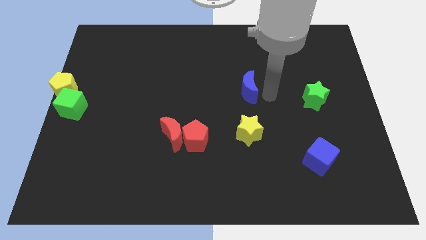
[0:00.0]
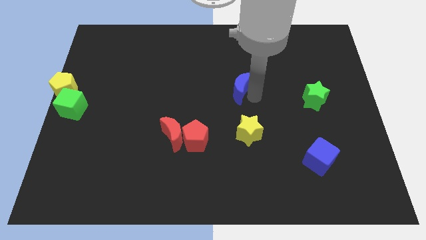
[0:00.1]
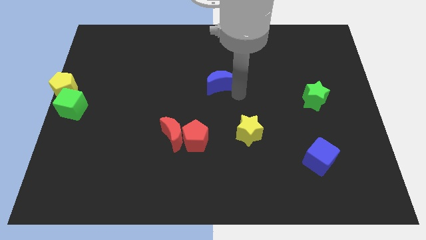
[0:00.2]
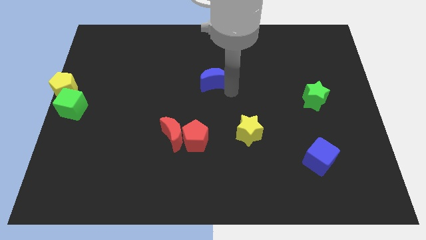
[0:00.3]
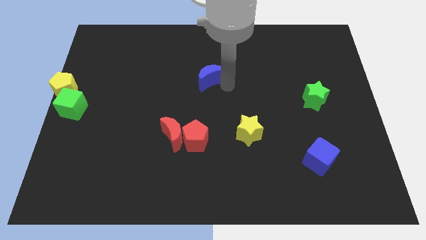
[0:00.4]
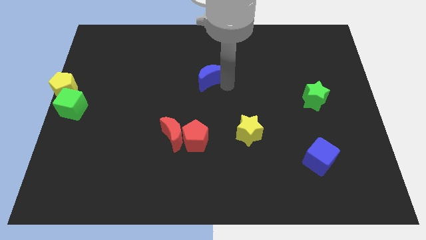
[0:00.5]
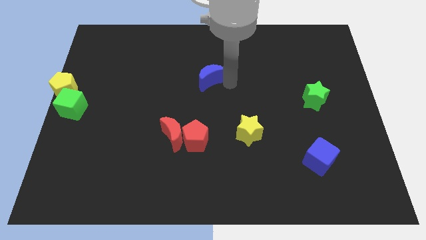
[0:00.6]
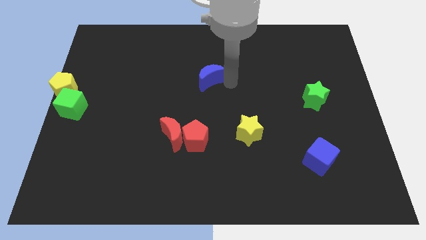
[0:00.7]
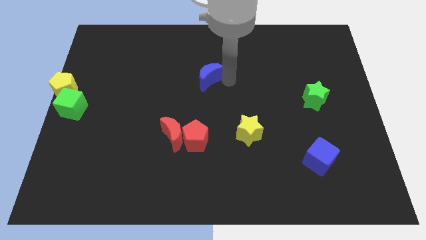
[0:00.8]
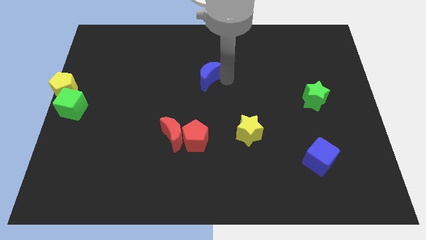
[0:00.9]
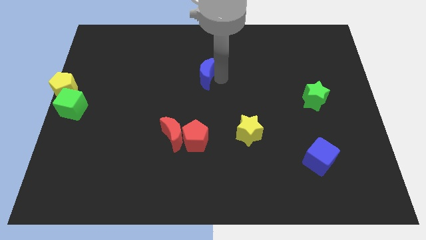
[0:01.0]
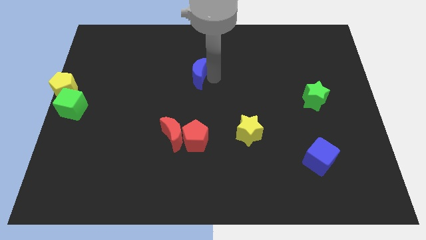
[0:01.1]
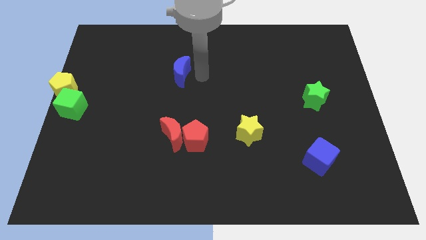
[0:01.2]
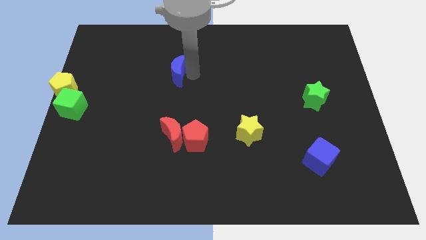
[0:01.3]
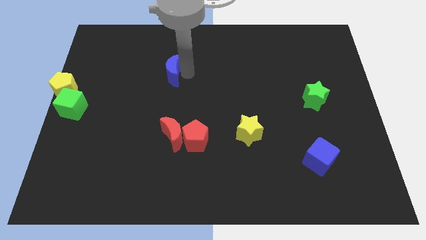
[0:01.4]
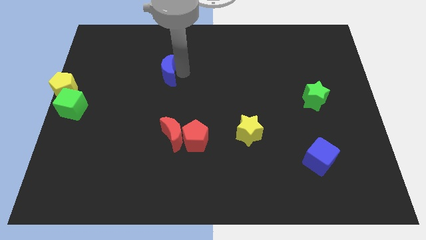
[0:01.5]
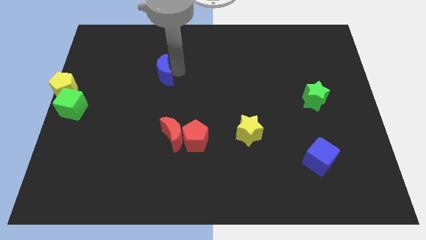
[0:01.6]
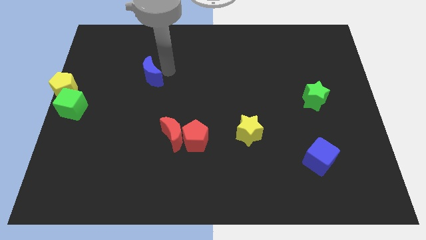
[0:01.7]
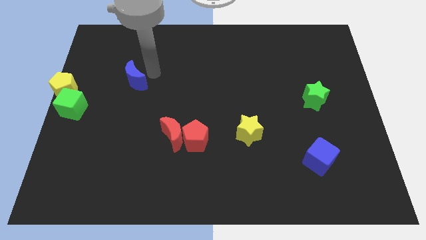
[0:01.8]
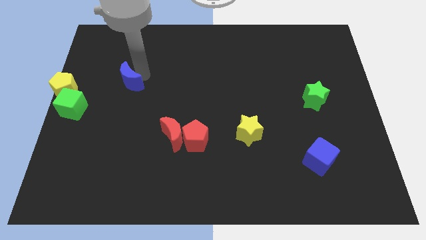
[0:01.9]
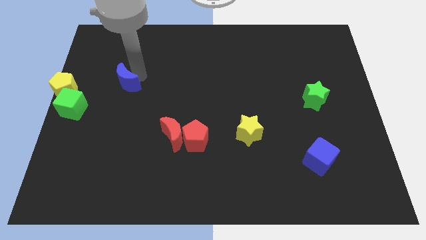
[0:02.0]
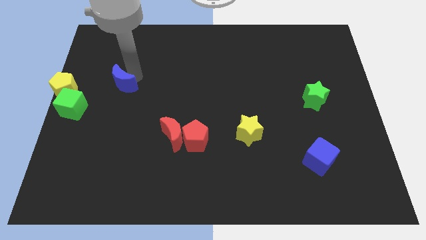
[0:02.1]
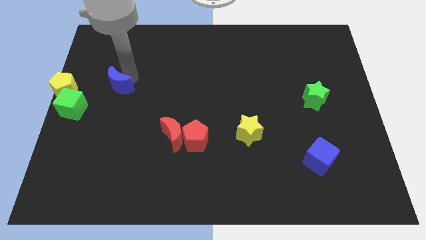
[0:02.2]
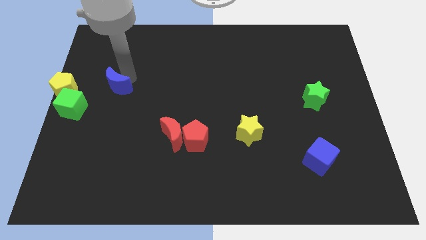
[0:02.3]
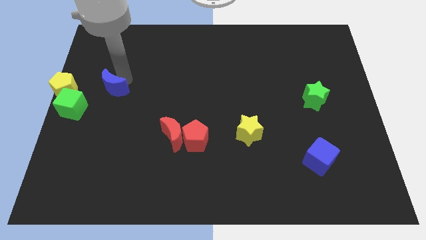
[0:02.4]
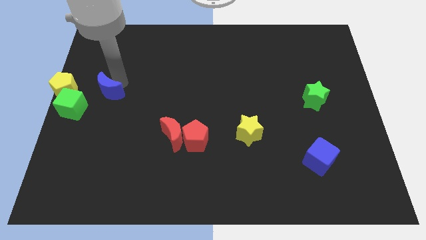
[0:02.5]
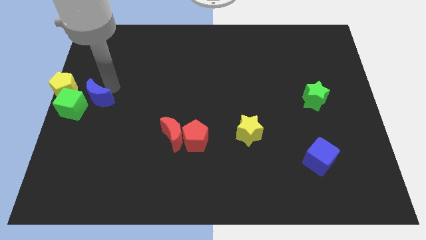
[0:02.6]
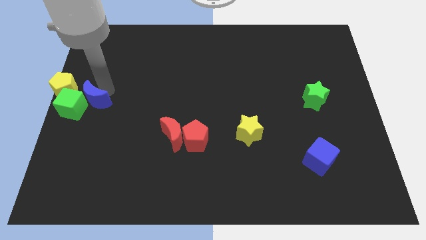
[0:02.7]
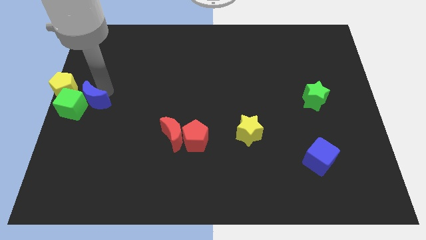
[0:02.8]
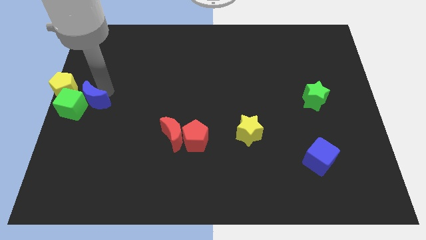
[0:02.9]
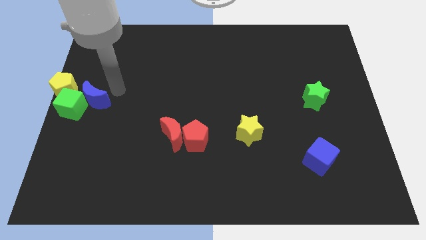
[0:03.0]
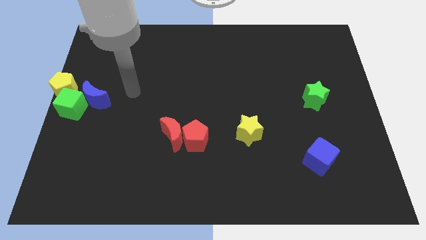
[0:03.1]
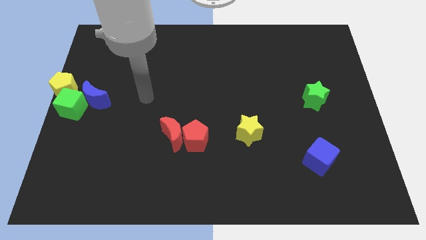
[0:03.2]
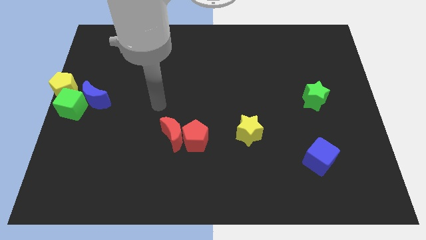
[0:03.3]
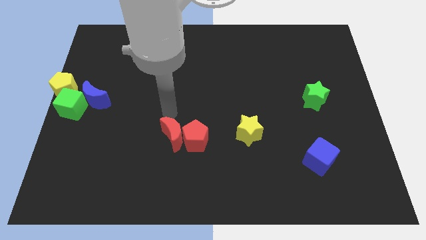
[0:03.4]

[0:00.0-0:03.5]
move blue moon into the green cube

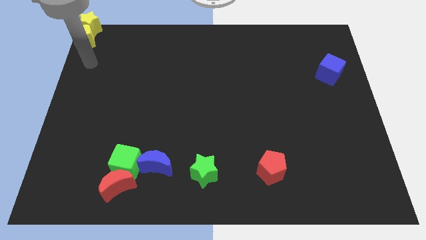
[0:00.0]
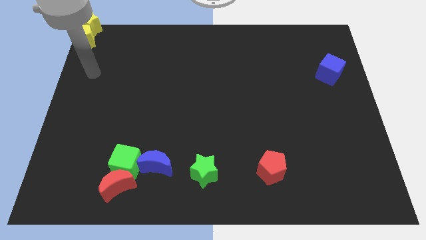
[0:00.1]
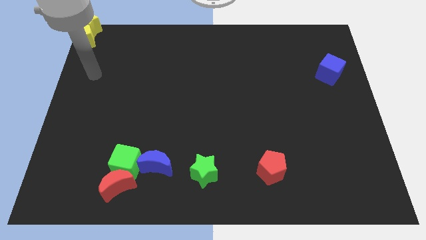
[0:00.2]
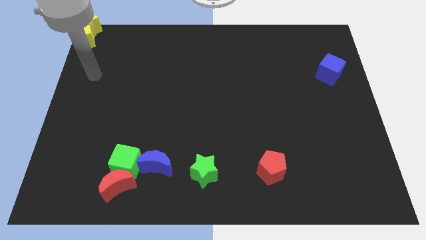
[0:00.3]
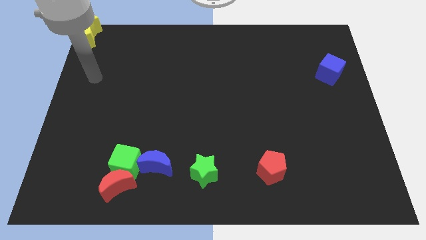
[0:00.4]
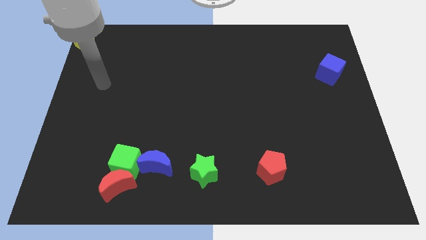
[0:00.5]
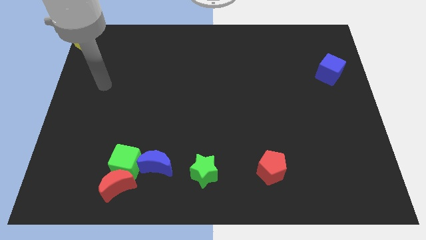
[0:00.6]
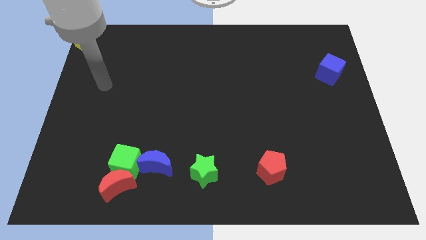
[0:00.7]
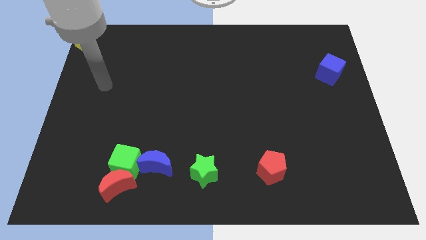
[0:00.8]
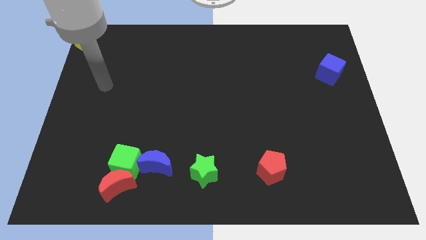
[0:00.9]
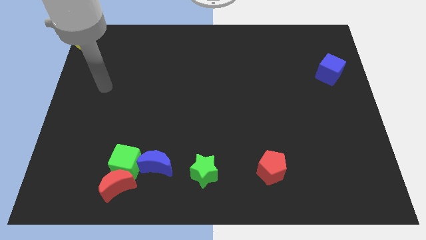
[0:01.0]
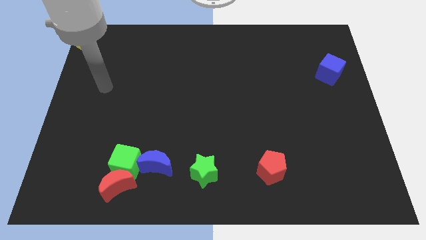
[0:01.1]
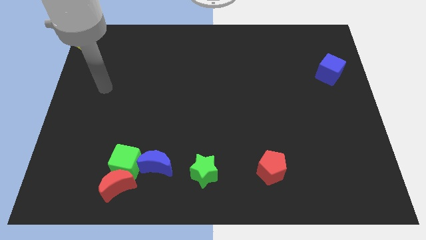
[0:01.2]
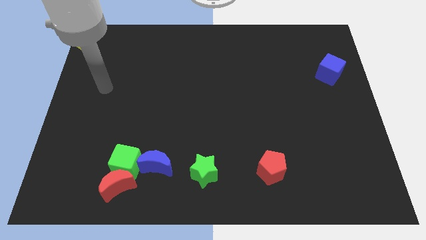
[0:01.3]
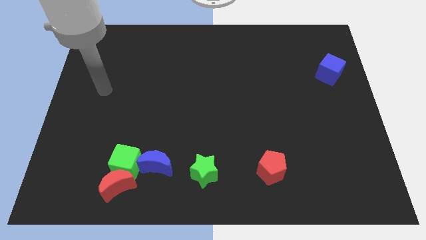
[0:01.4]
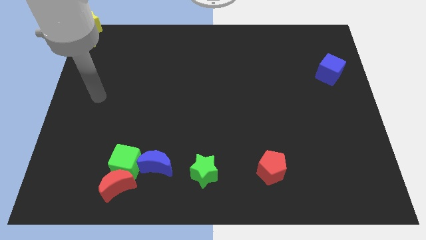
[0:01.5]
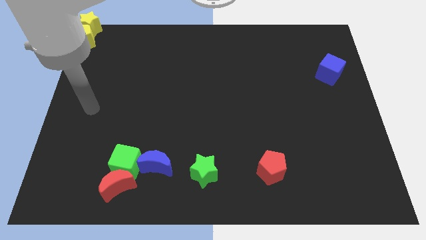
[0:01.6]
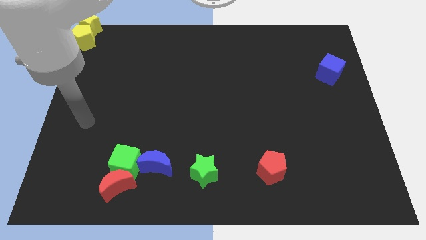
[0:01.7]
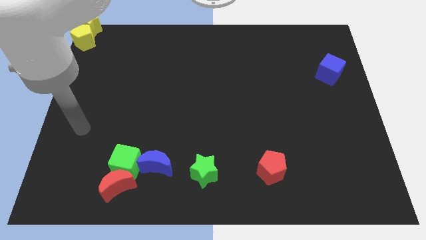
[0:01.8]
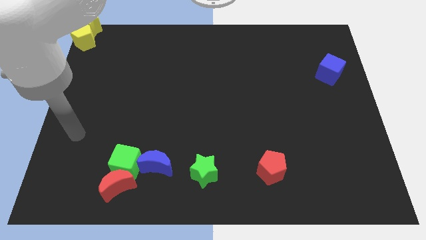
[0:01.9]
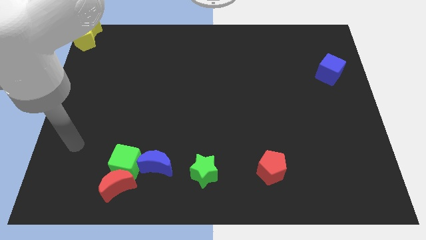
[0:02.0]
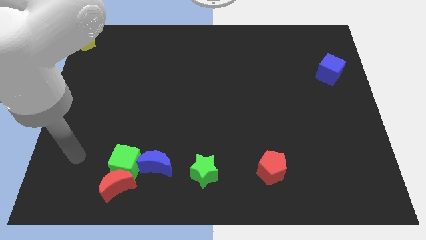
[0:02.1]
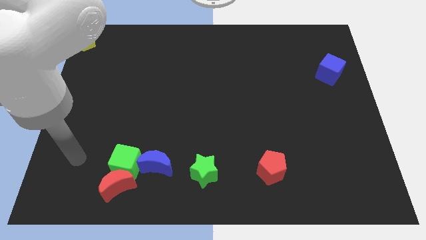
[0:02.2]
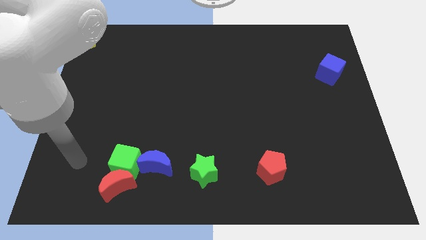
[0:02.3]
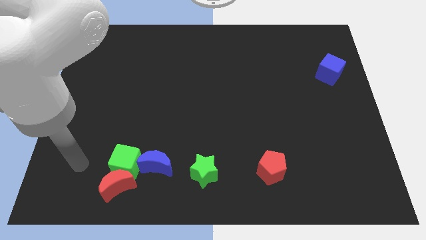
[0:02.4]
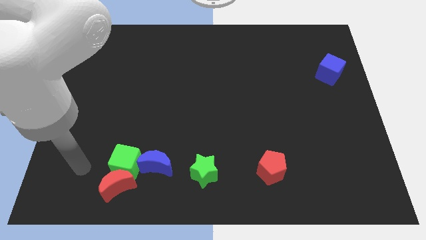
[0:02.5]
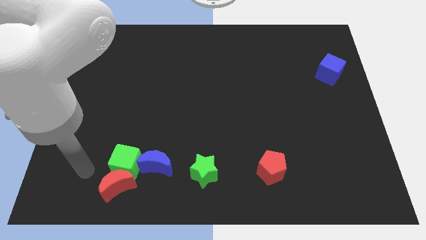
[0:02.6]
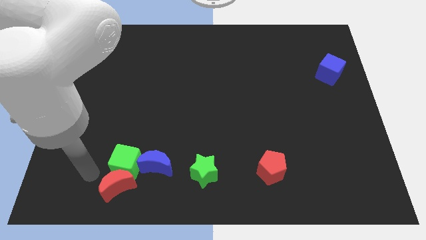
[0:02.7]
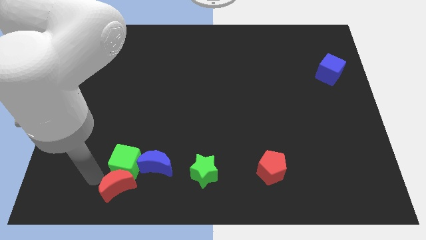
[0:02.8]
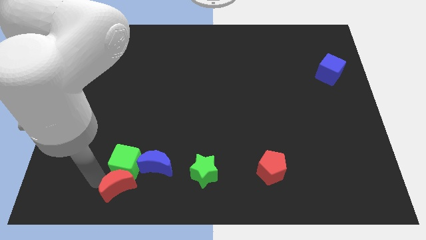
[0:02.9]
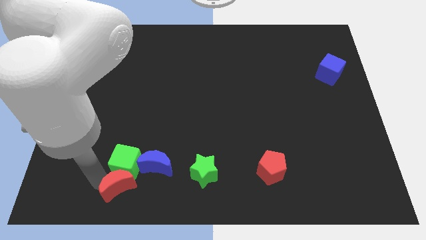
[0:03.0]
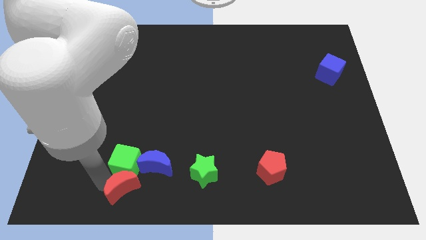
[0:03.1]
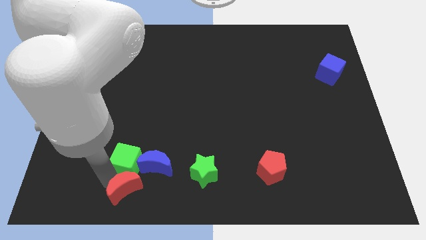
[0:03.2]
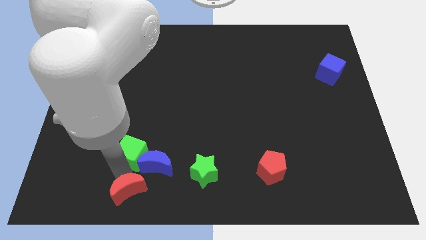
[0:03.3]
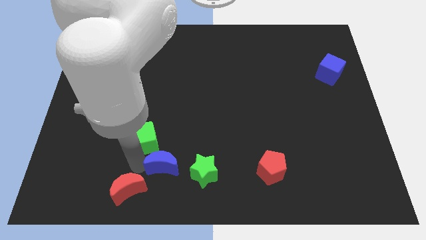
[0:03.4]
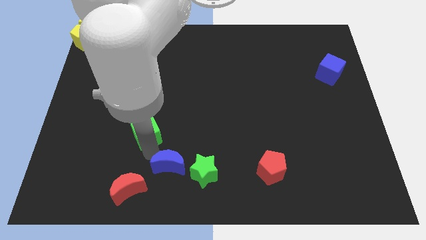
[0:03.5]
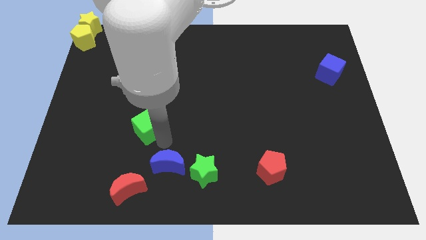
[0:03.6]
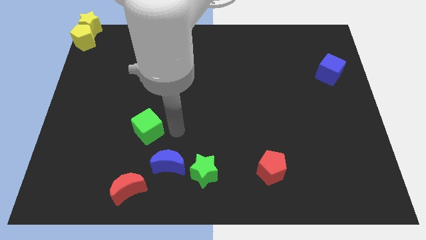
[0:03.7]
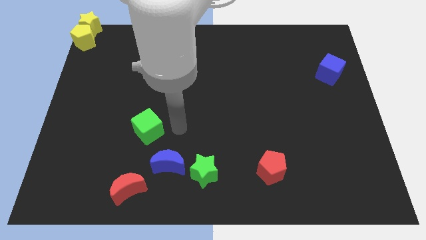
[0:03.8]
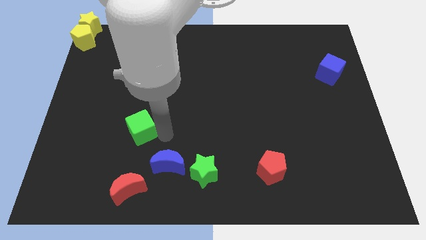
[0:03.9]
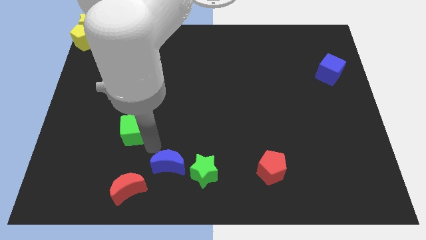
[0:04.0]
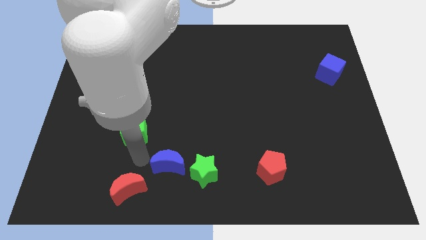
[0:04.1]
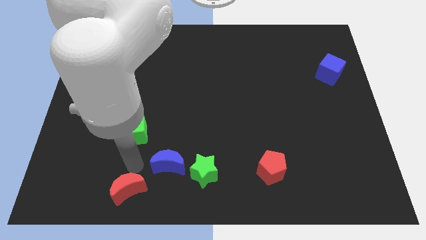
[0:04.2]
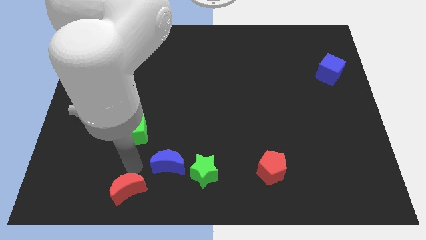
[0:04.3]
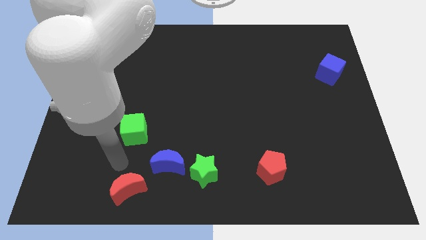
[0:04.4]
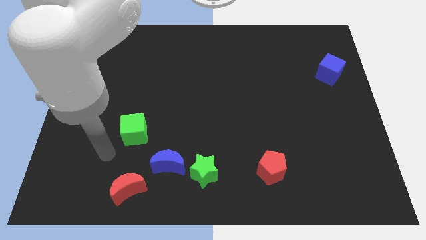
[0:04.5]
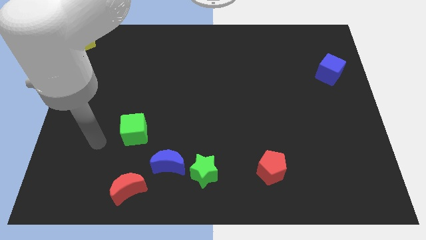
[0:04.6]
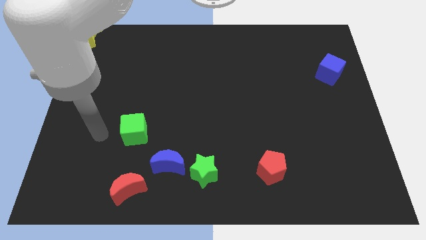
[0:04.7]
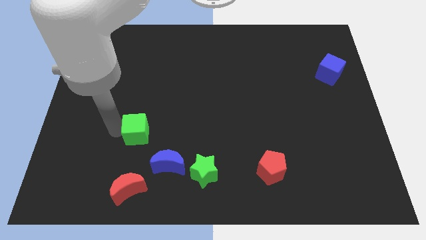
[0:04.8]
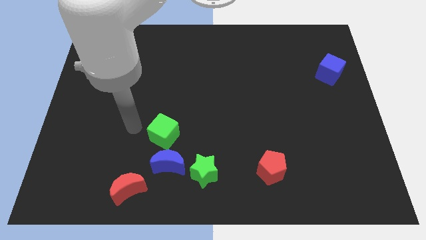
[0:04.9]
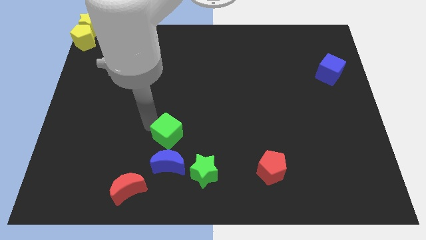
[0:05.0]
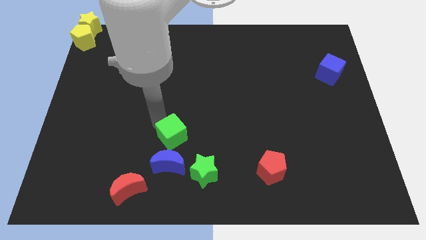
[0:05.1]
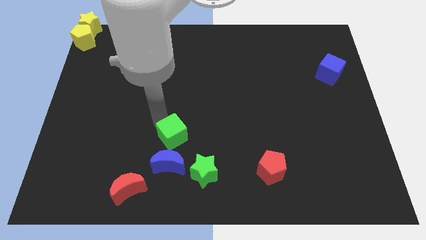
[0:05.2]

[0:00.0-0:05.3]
place the green cube above the blue moon
